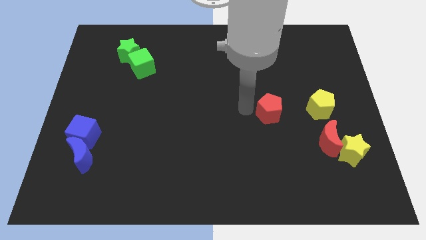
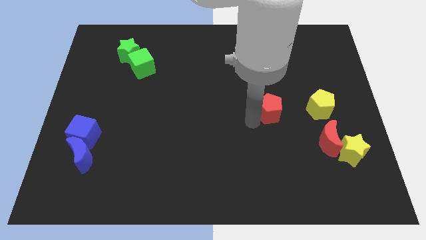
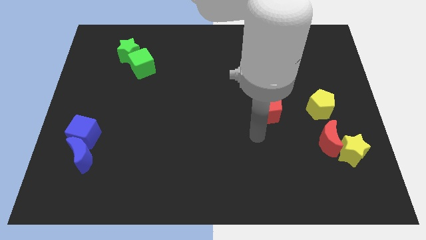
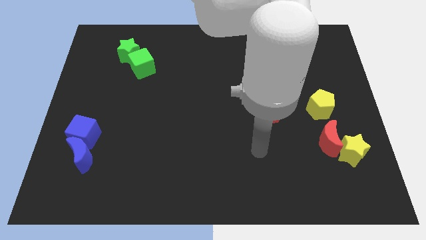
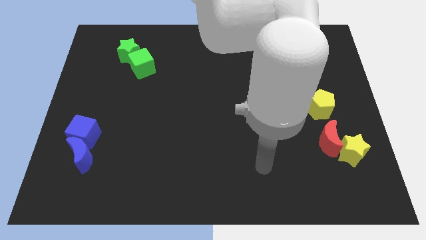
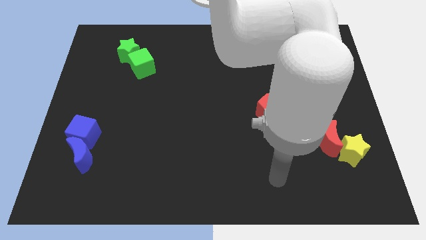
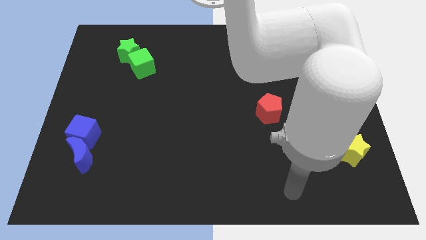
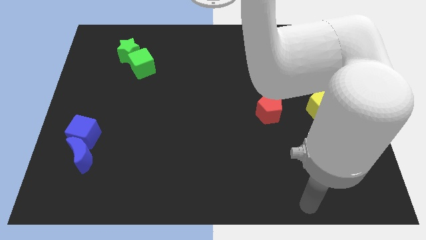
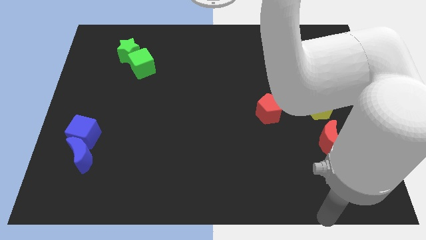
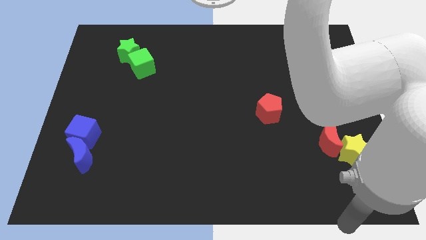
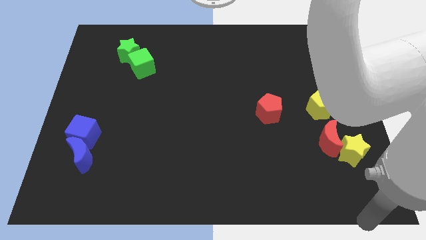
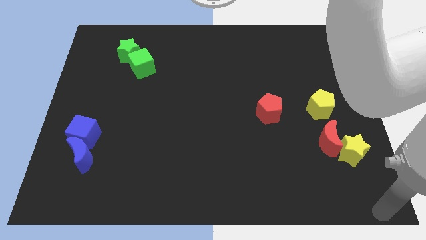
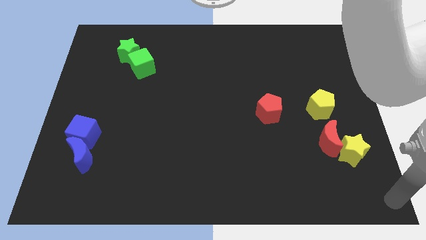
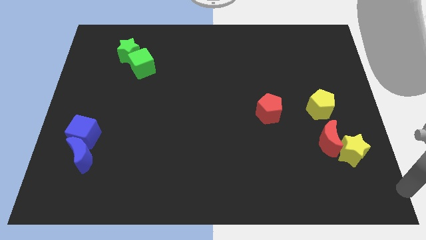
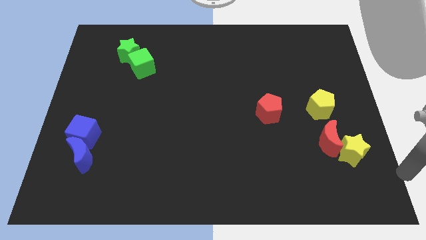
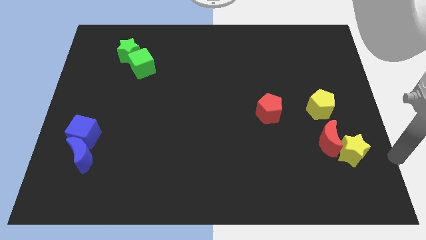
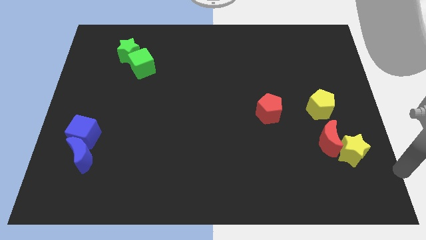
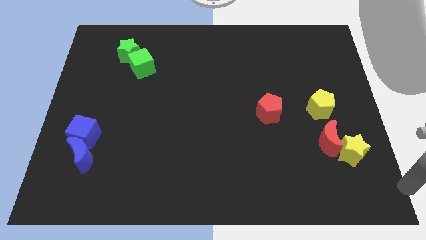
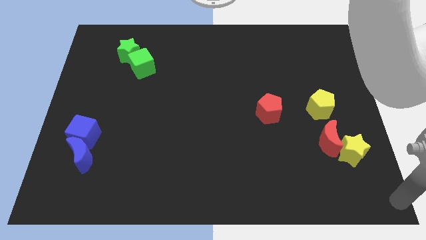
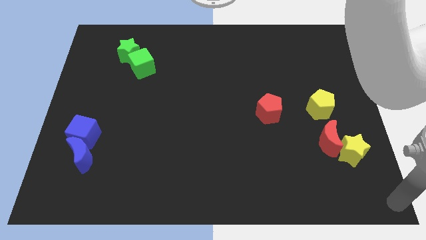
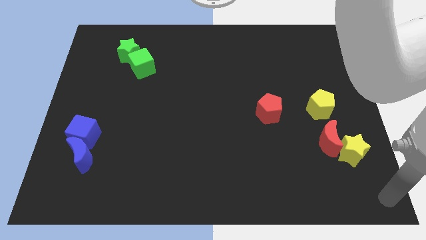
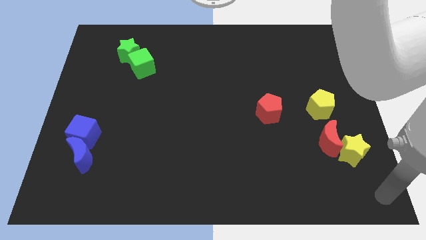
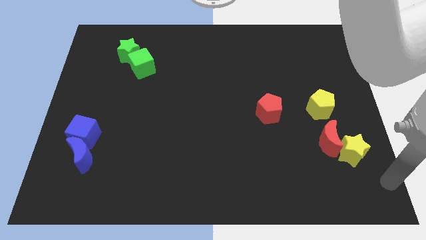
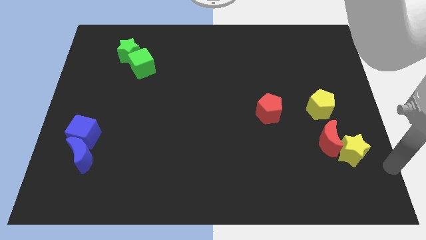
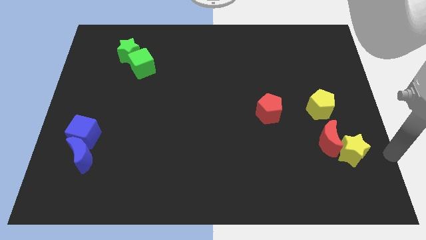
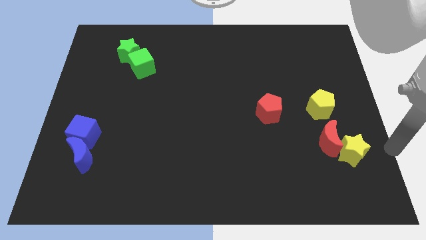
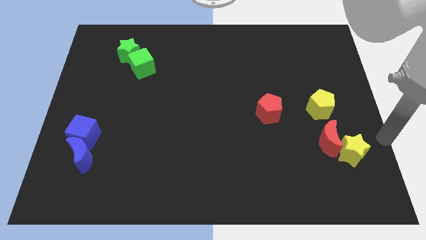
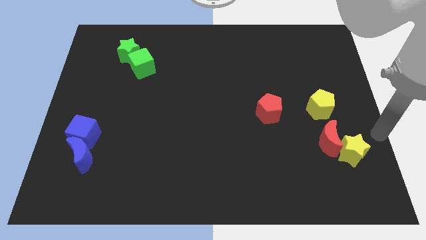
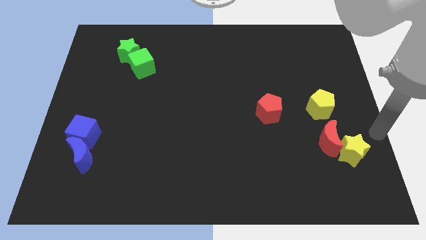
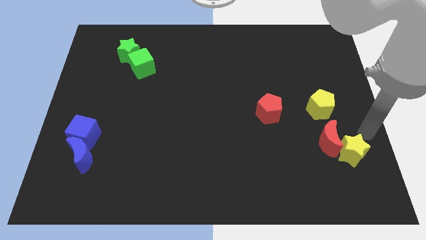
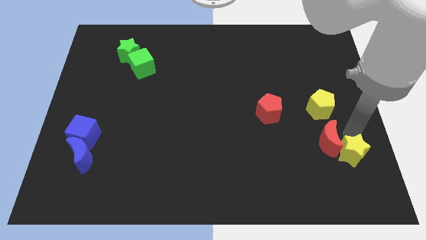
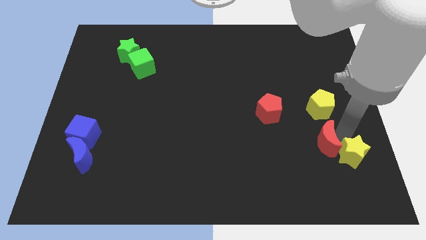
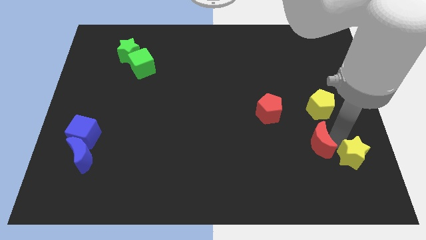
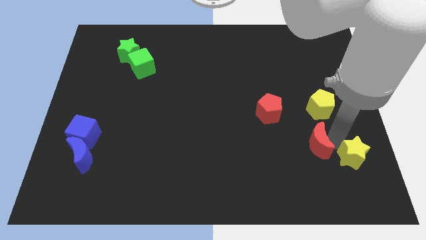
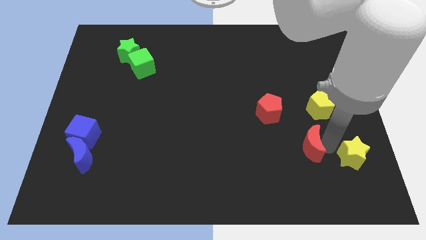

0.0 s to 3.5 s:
separate the red moon and yellow star from each other

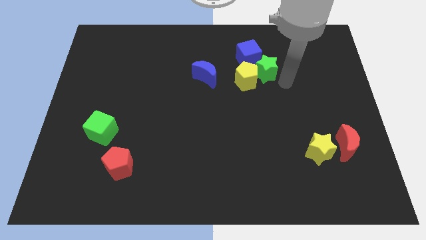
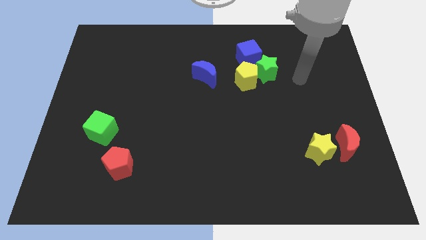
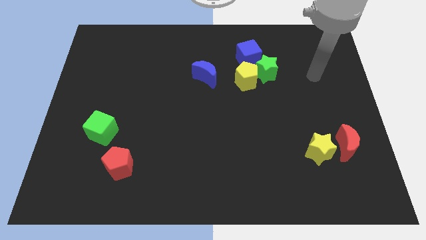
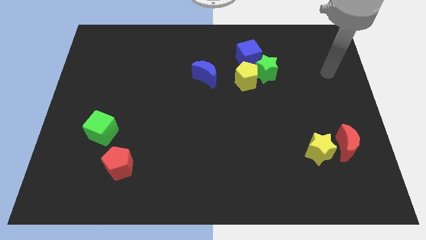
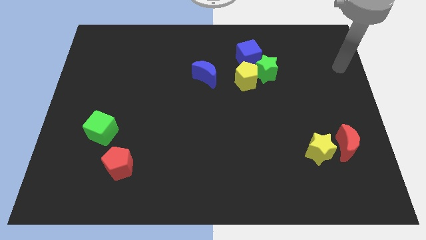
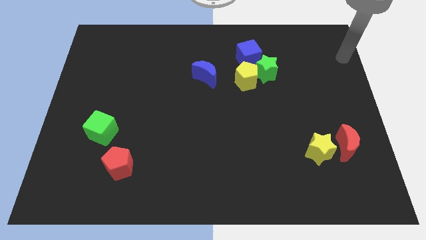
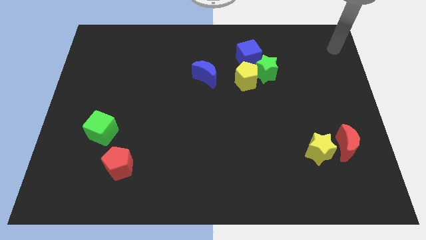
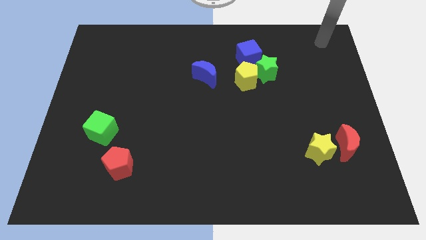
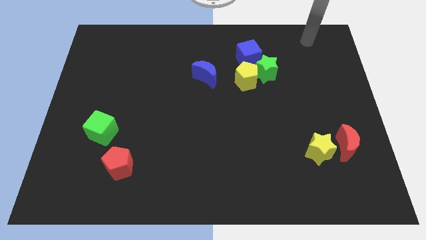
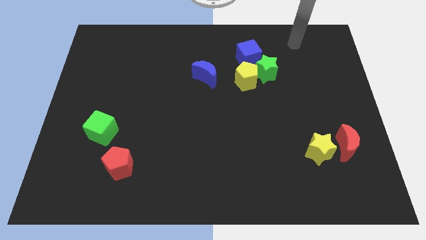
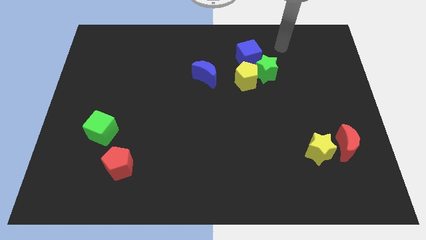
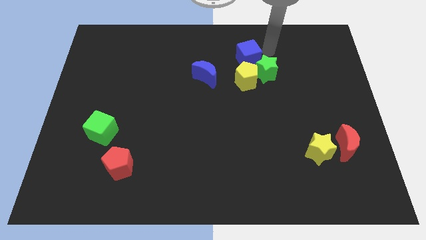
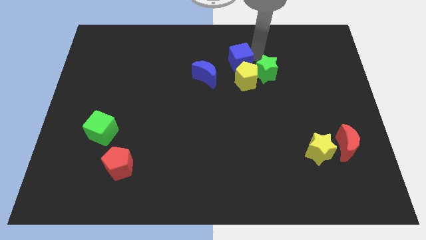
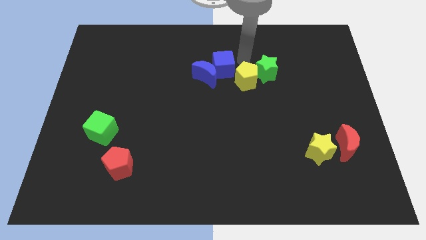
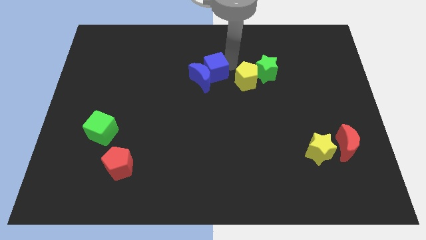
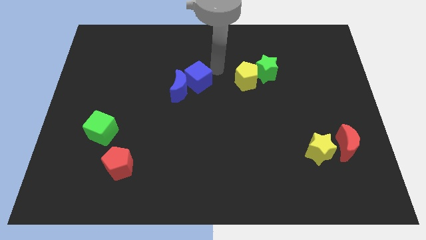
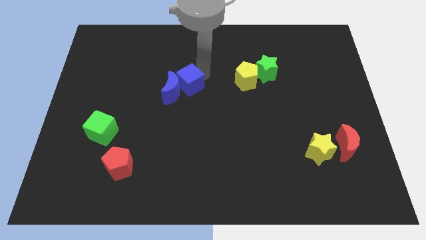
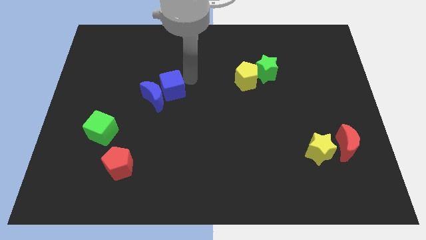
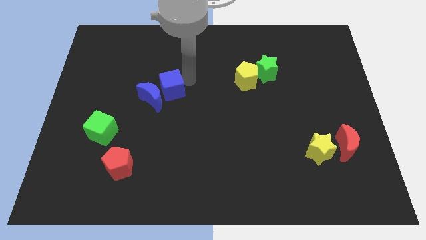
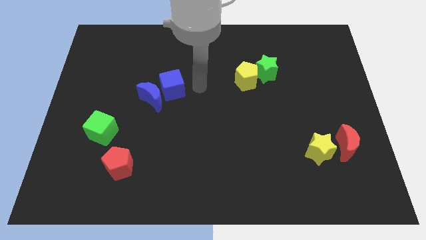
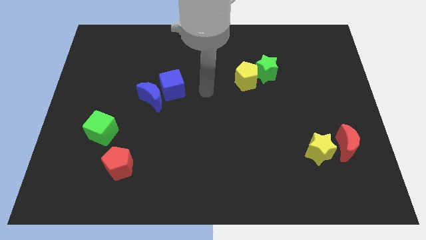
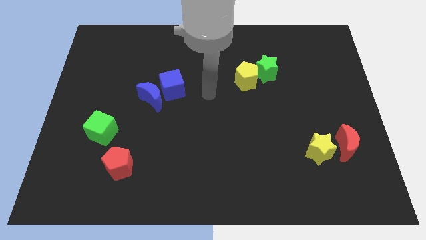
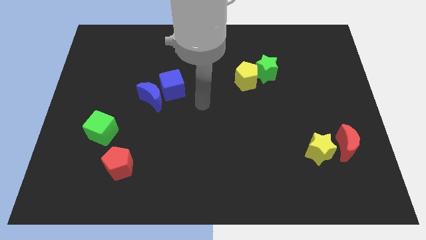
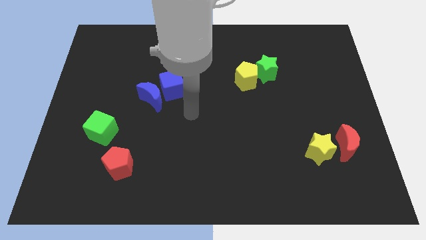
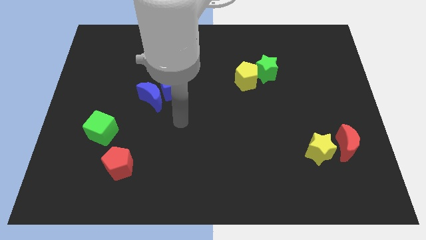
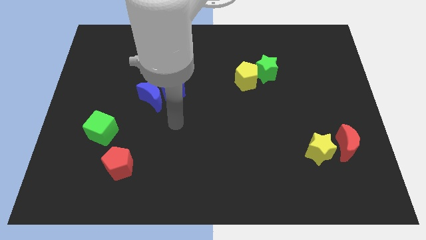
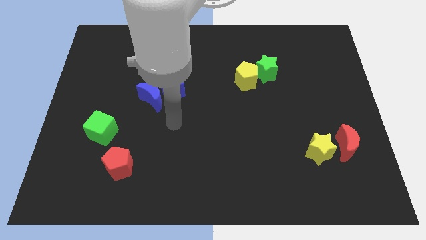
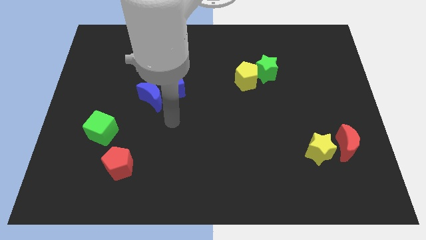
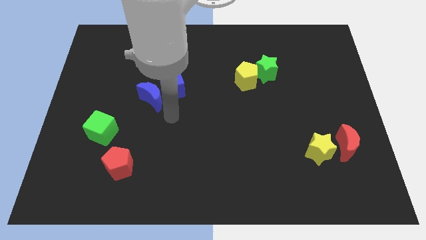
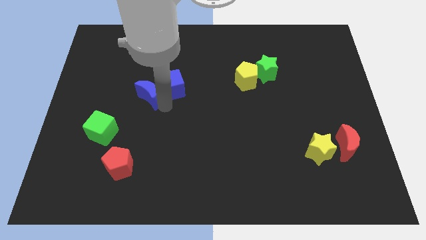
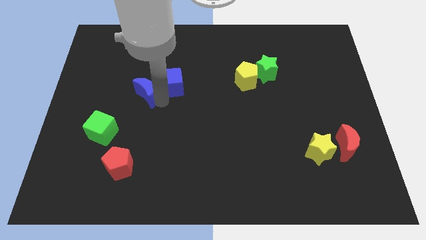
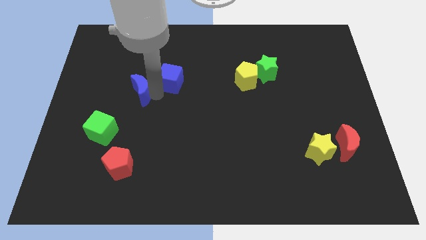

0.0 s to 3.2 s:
push the blue blocks to center left

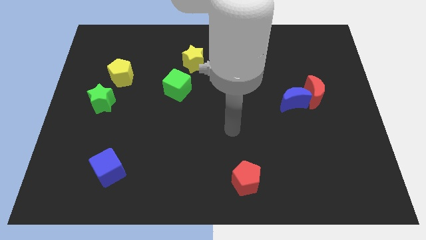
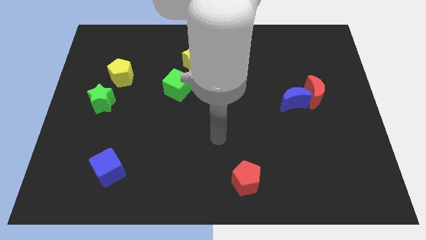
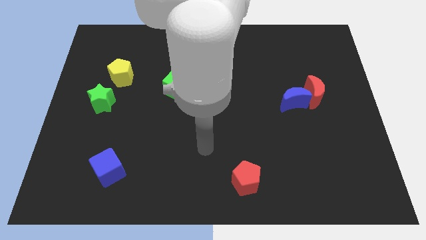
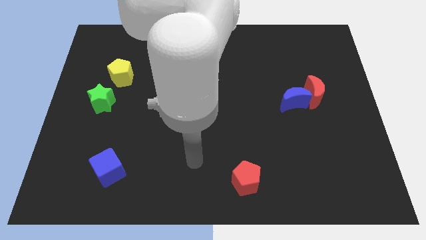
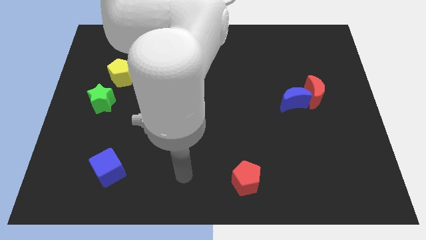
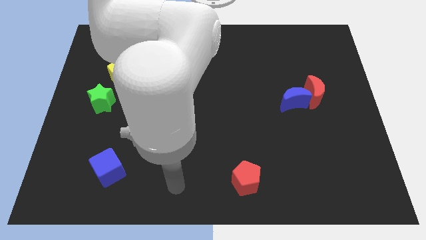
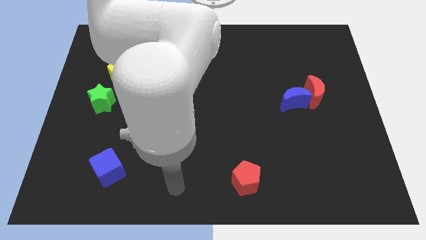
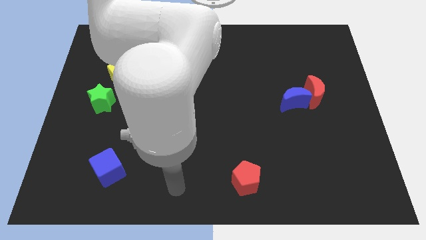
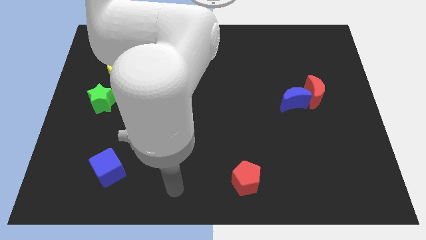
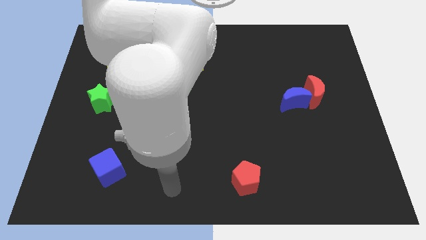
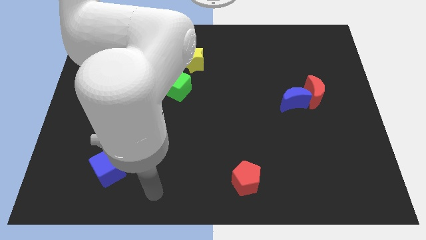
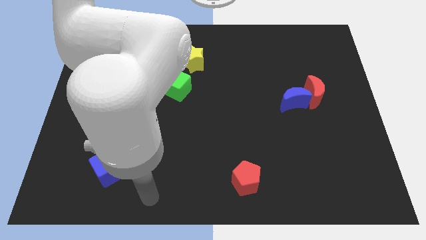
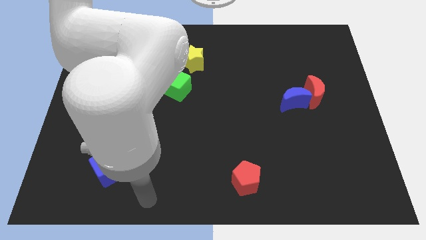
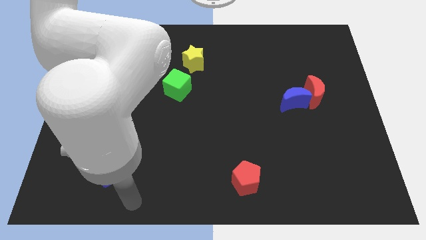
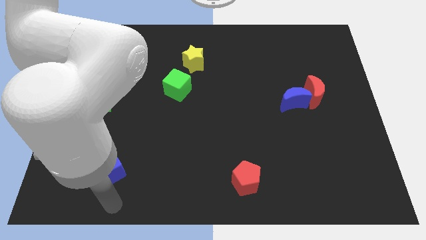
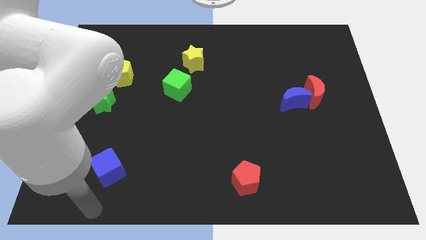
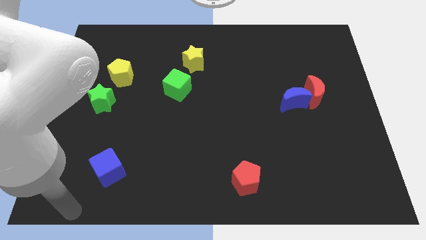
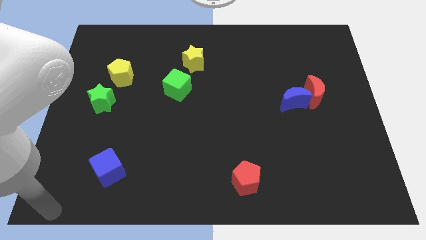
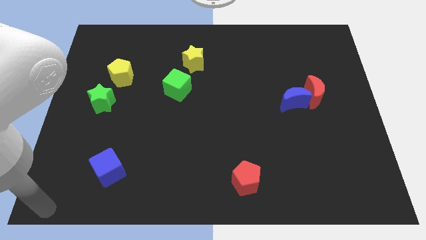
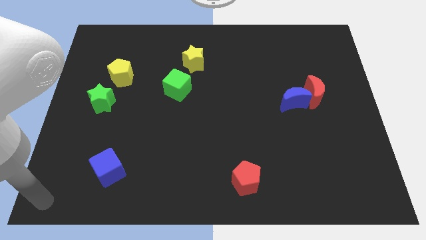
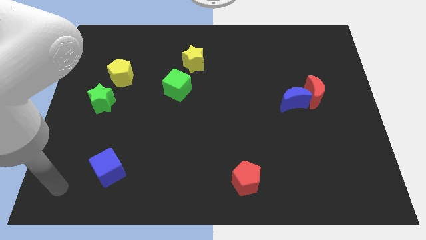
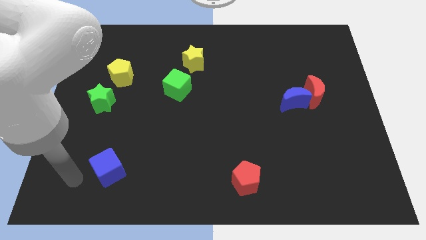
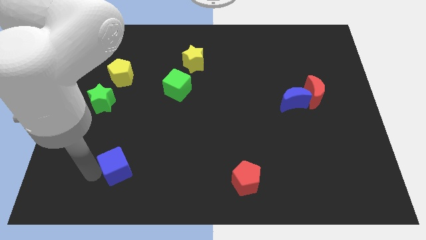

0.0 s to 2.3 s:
move your arm to the left of the blue cube

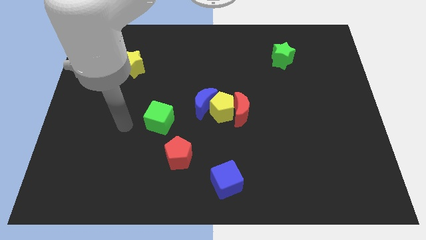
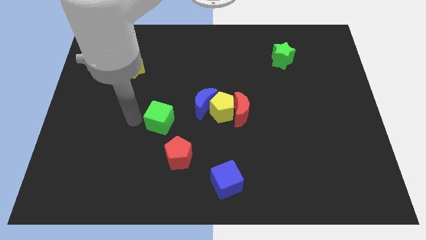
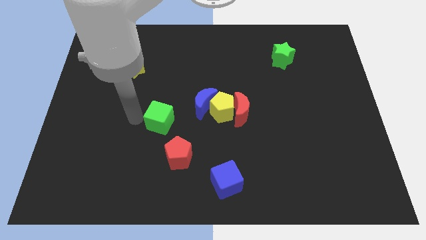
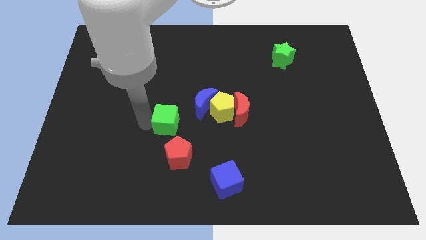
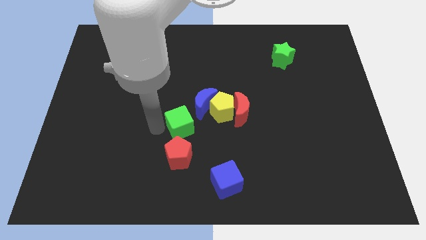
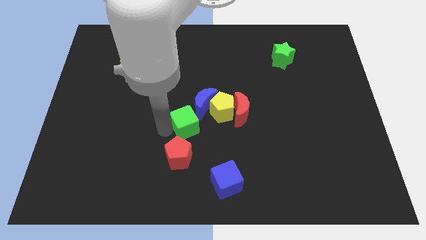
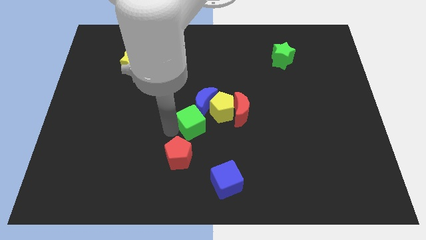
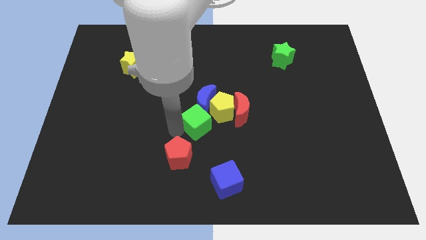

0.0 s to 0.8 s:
place the green cube in between blue moon and red pentagon
